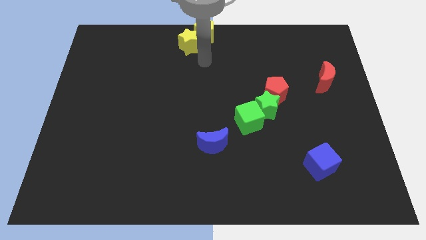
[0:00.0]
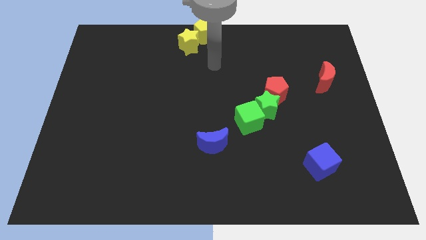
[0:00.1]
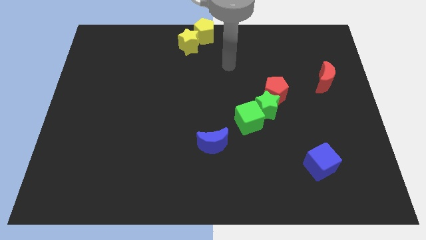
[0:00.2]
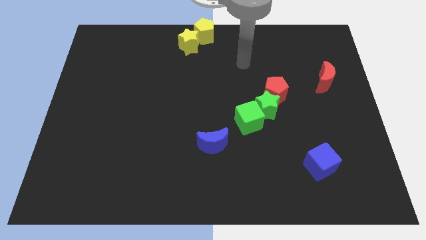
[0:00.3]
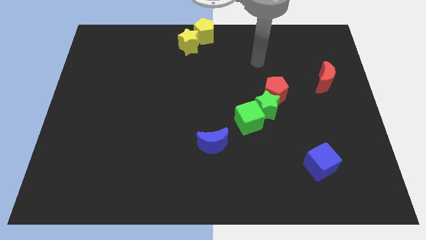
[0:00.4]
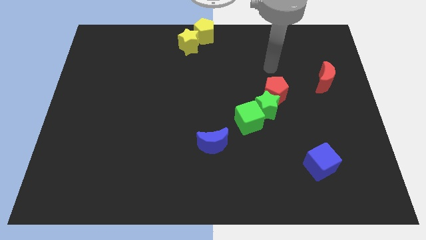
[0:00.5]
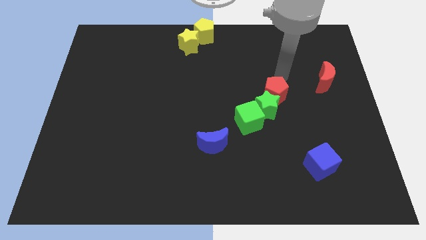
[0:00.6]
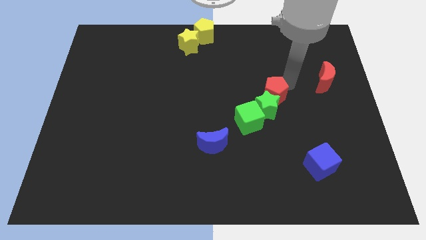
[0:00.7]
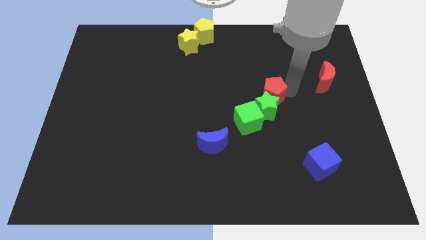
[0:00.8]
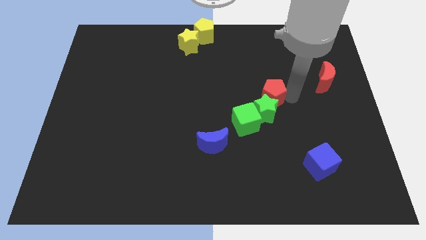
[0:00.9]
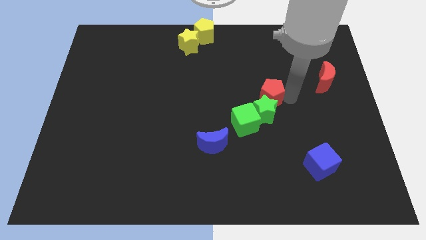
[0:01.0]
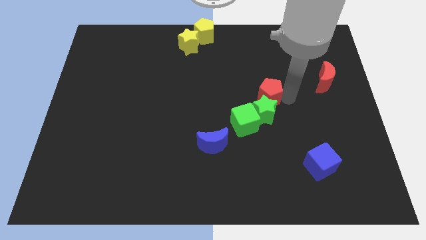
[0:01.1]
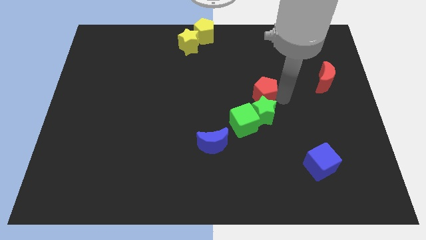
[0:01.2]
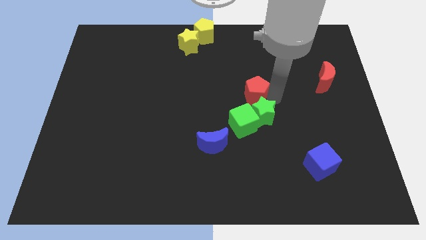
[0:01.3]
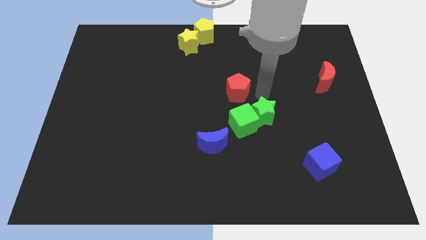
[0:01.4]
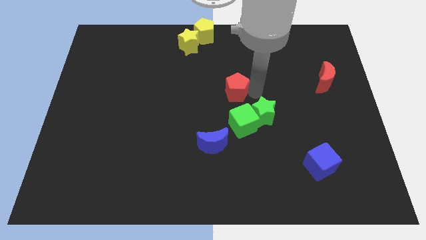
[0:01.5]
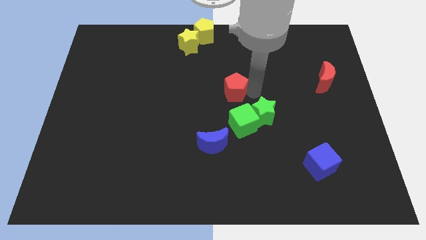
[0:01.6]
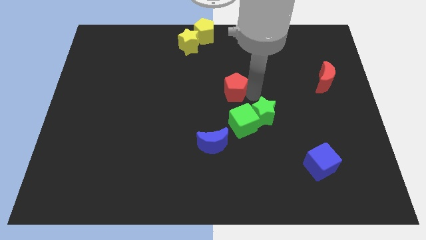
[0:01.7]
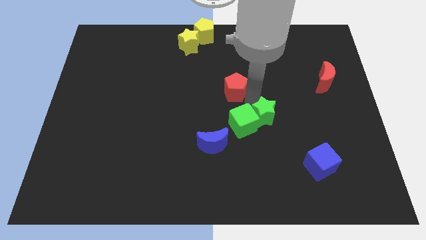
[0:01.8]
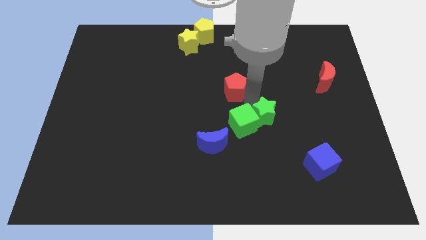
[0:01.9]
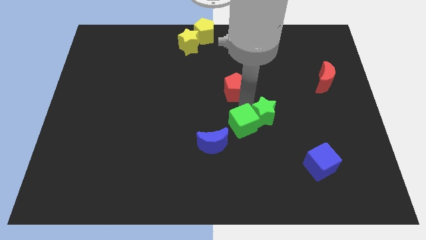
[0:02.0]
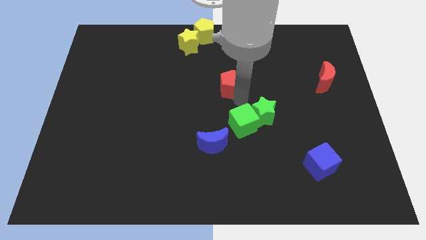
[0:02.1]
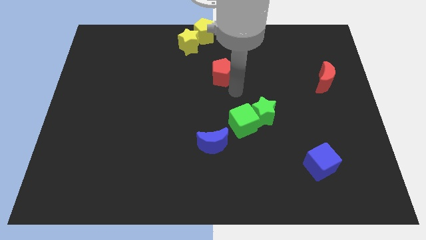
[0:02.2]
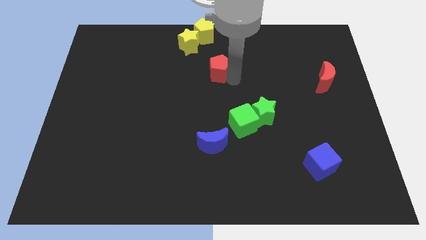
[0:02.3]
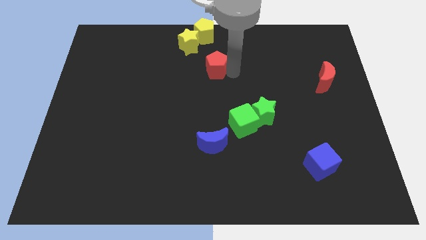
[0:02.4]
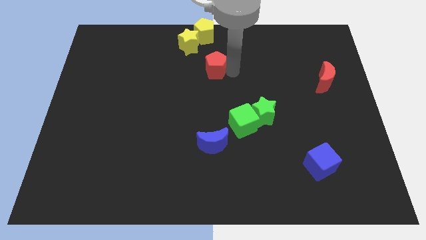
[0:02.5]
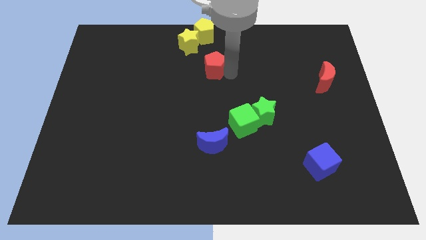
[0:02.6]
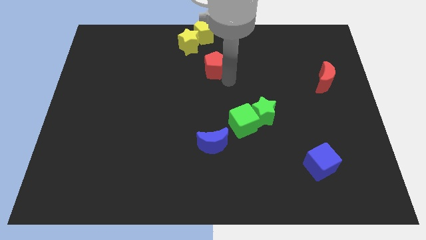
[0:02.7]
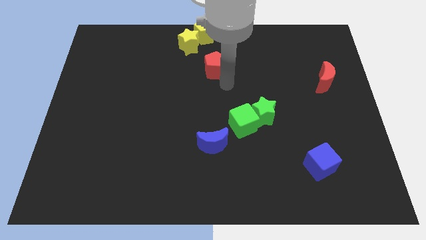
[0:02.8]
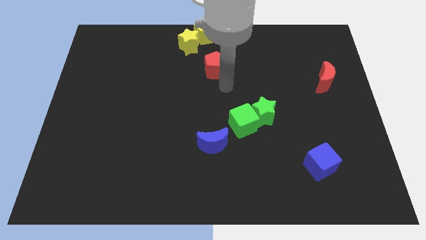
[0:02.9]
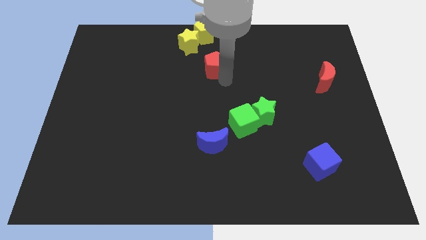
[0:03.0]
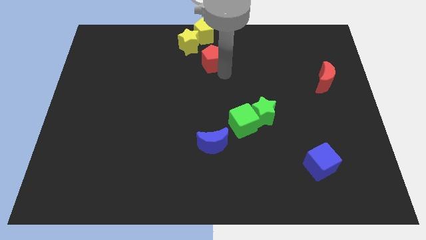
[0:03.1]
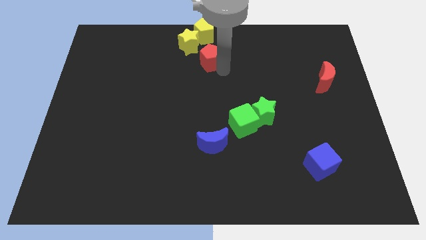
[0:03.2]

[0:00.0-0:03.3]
separate red pentagon from green star

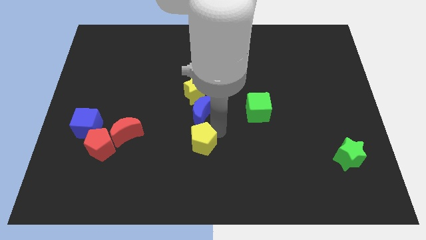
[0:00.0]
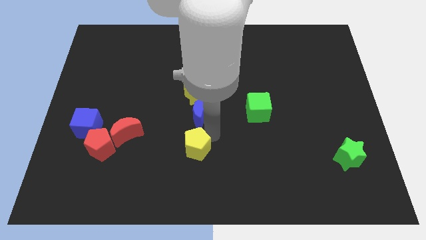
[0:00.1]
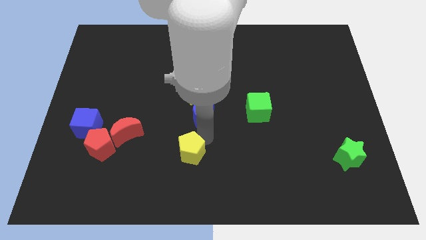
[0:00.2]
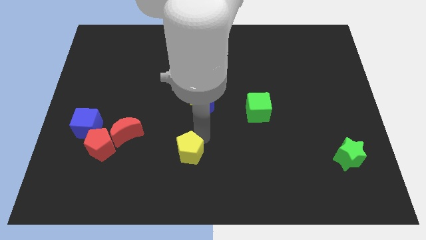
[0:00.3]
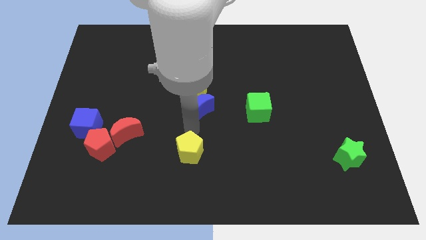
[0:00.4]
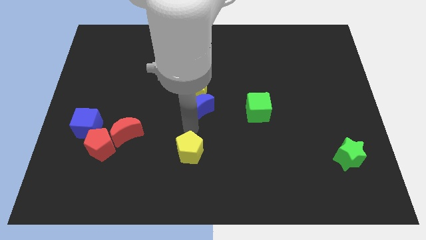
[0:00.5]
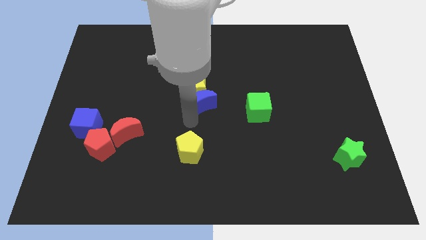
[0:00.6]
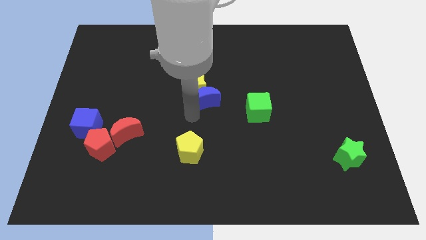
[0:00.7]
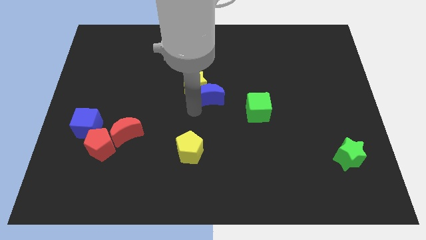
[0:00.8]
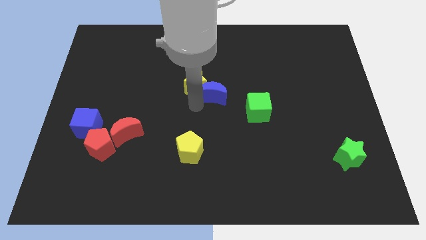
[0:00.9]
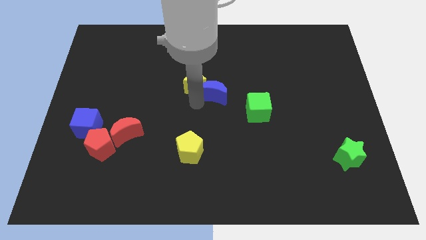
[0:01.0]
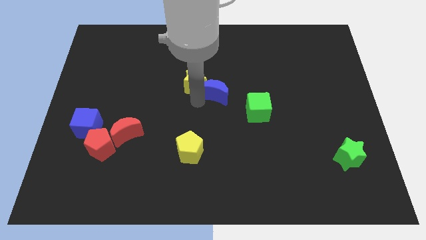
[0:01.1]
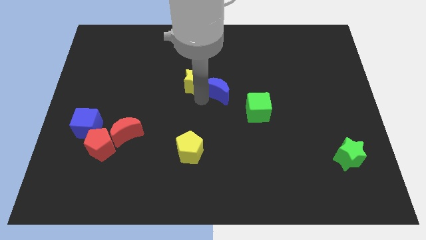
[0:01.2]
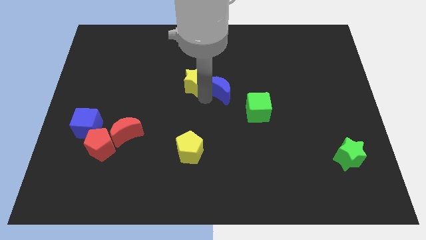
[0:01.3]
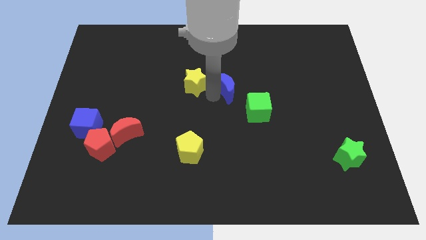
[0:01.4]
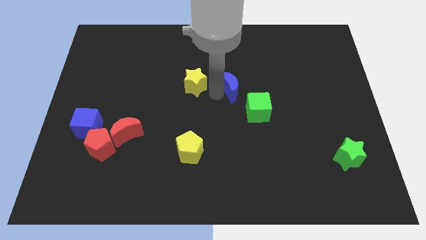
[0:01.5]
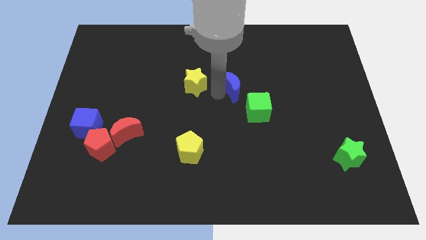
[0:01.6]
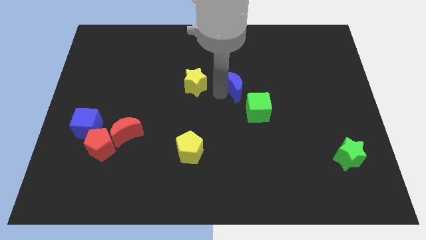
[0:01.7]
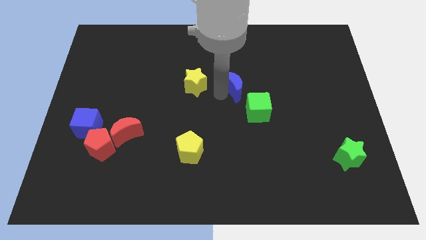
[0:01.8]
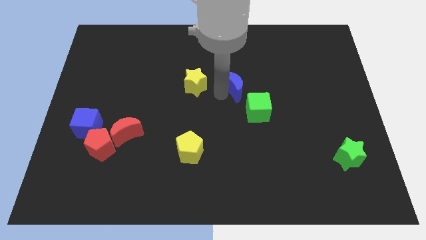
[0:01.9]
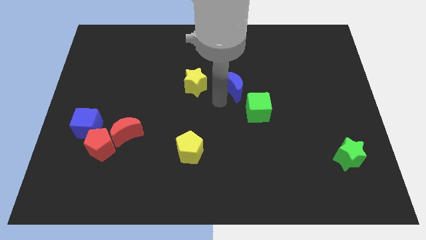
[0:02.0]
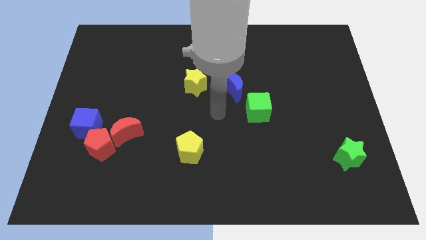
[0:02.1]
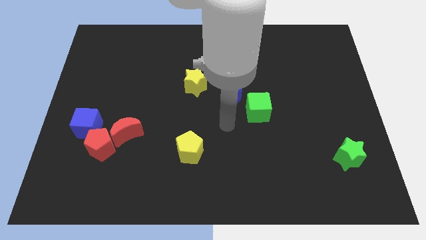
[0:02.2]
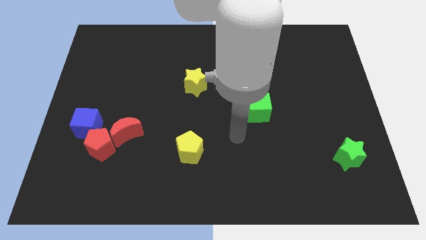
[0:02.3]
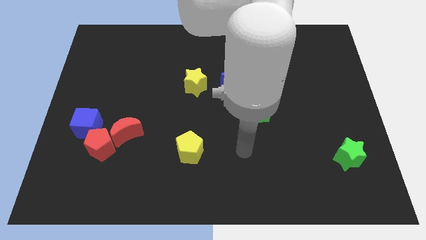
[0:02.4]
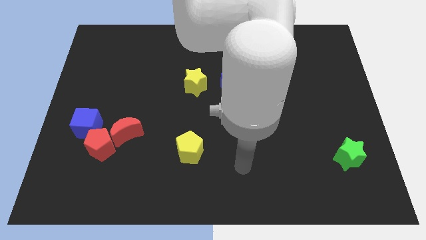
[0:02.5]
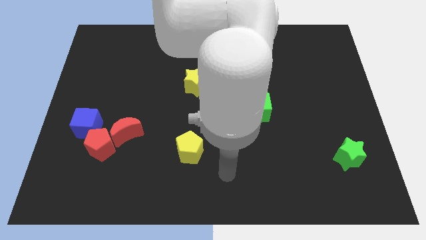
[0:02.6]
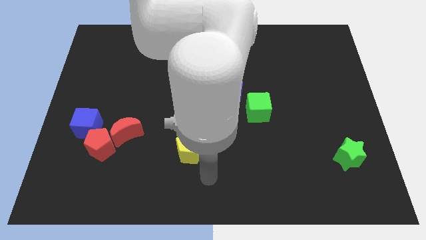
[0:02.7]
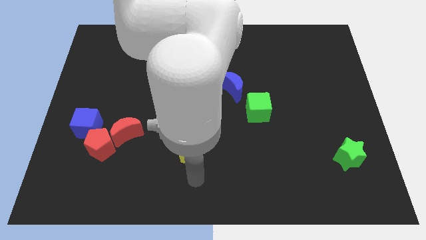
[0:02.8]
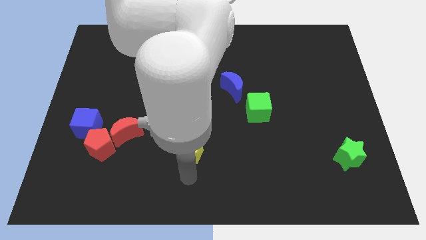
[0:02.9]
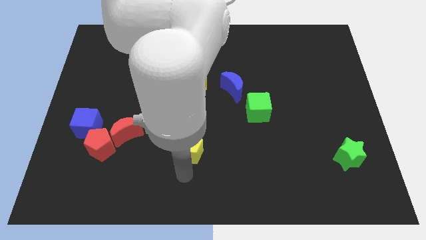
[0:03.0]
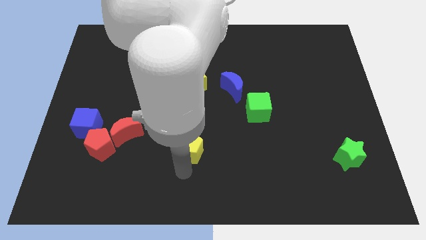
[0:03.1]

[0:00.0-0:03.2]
place the blue moon right to the yellow star

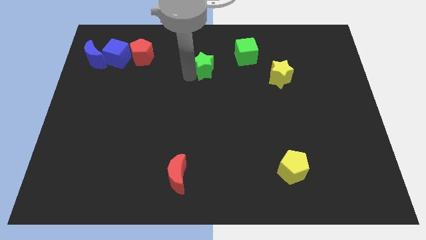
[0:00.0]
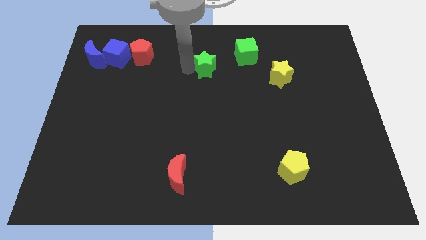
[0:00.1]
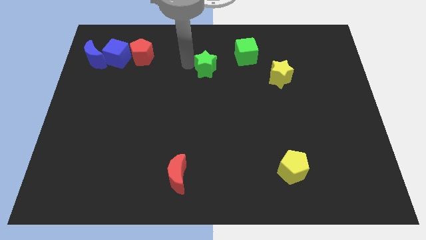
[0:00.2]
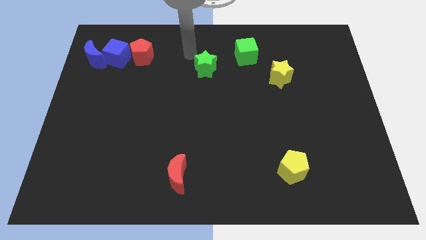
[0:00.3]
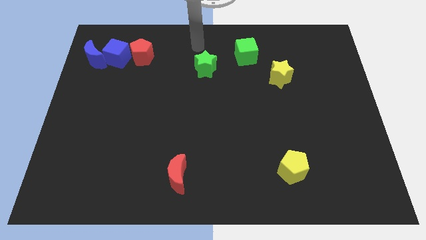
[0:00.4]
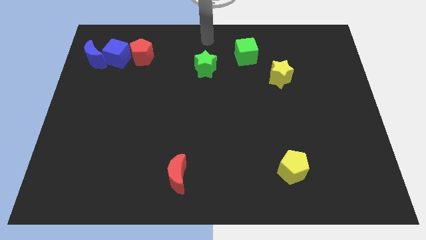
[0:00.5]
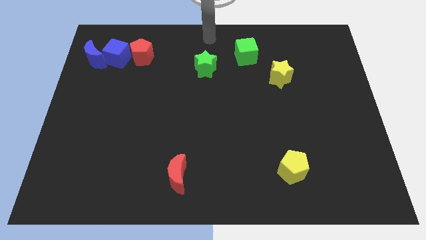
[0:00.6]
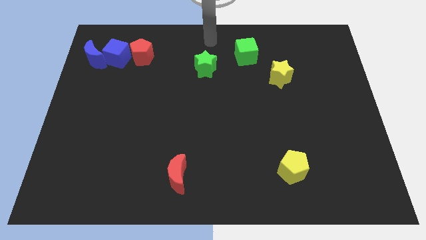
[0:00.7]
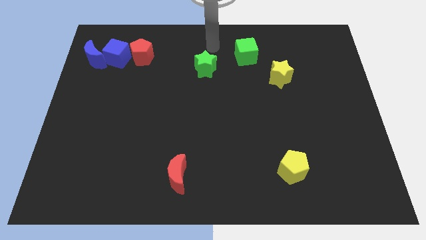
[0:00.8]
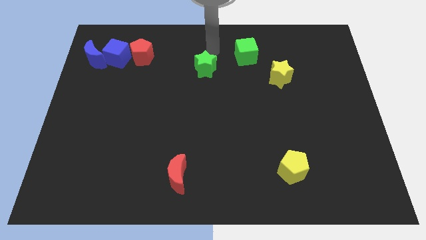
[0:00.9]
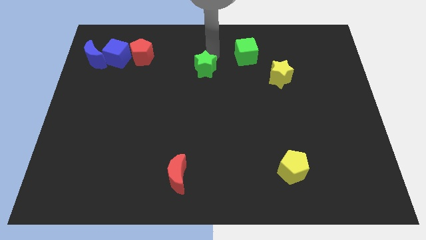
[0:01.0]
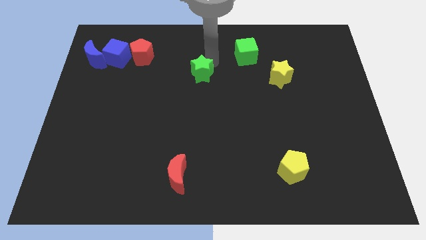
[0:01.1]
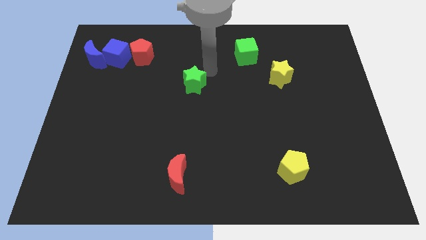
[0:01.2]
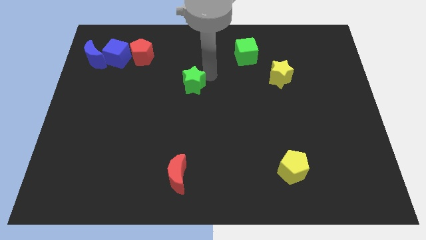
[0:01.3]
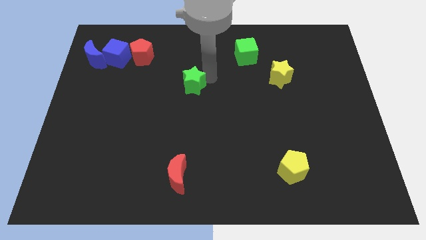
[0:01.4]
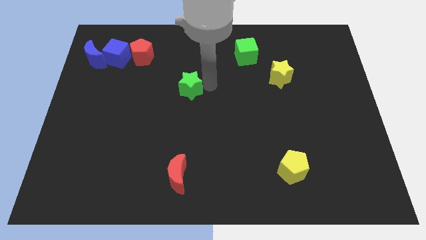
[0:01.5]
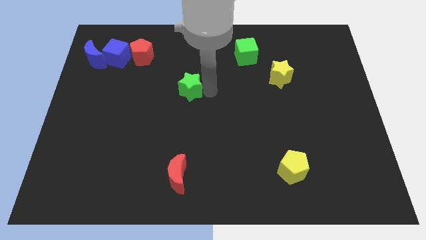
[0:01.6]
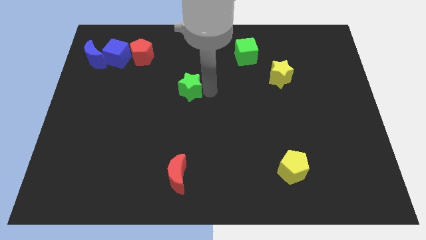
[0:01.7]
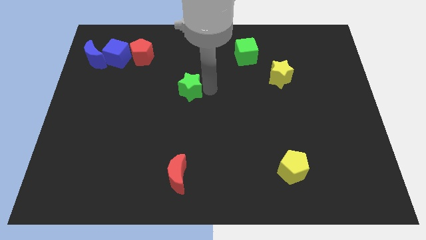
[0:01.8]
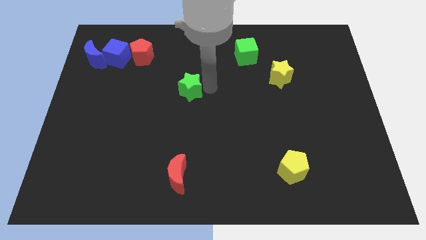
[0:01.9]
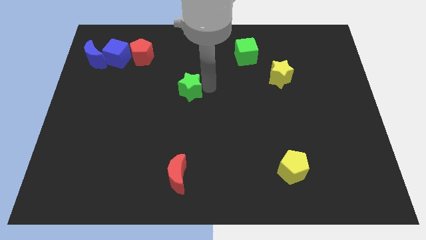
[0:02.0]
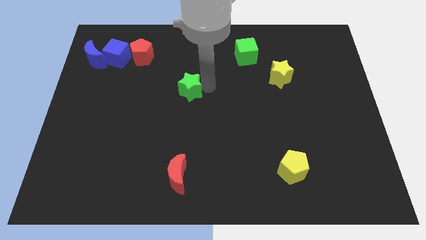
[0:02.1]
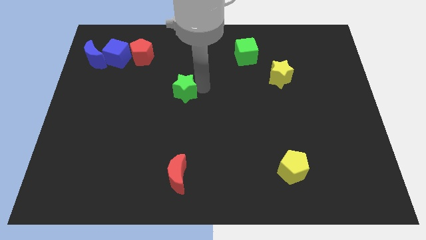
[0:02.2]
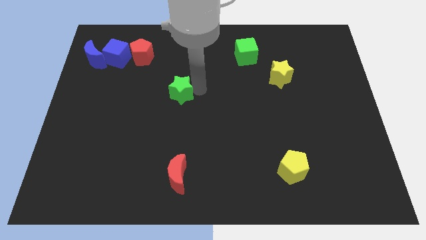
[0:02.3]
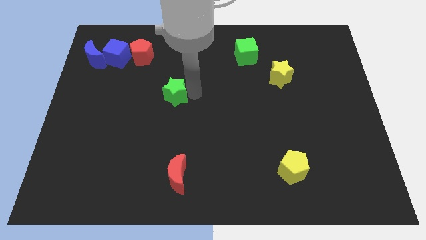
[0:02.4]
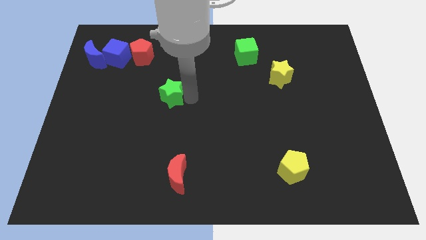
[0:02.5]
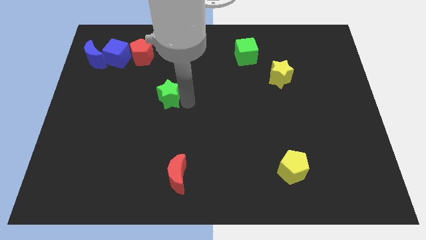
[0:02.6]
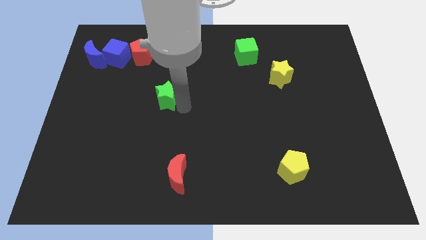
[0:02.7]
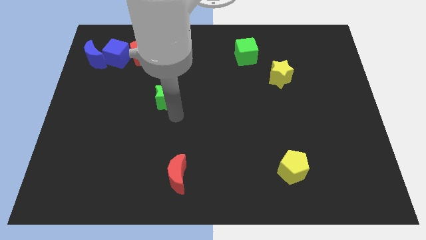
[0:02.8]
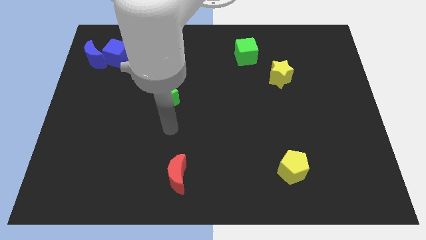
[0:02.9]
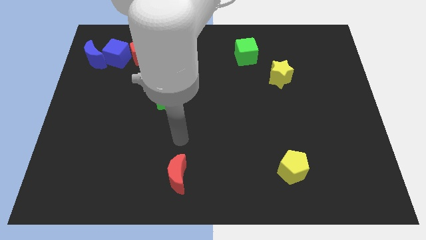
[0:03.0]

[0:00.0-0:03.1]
slightly push the green star to the left of the board
